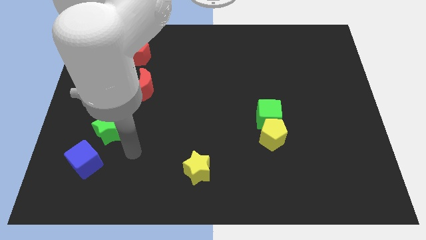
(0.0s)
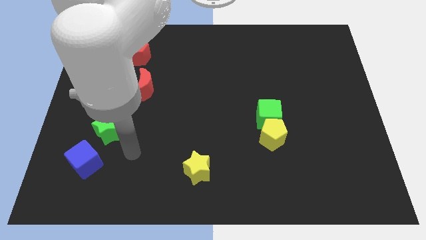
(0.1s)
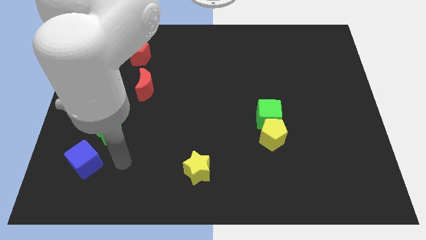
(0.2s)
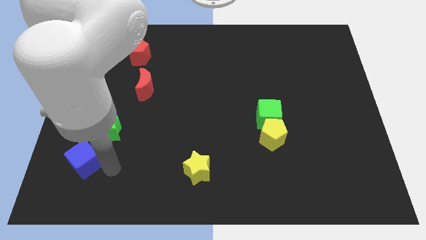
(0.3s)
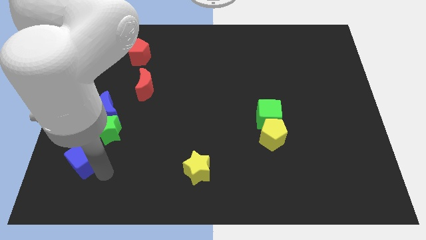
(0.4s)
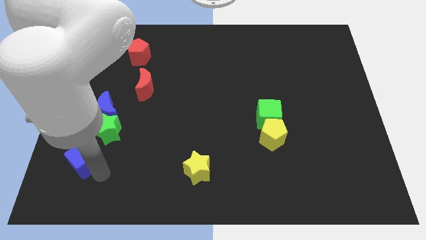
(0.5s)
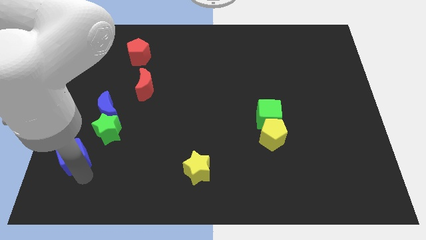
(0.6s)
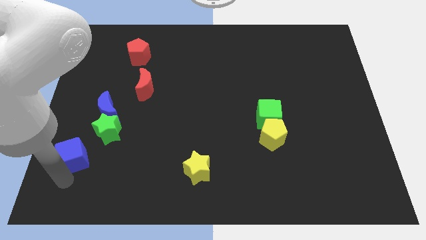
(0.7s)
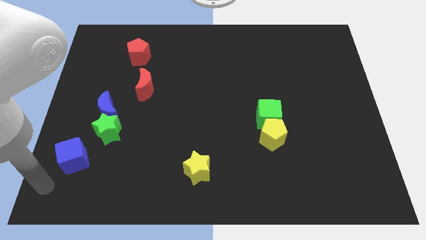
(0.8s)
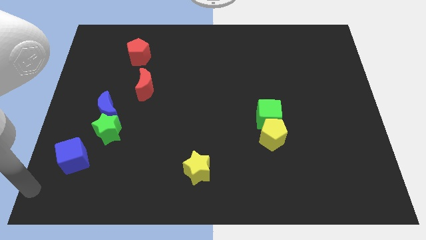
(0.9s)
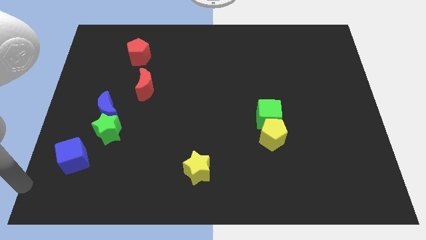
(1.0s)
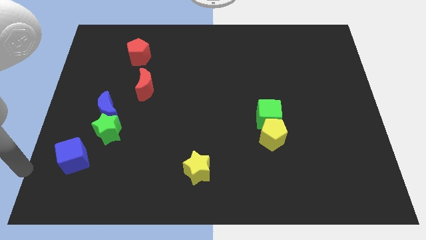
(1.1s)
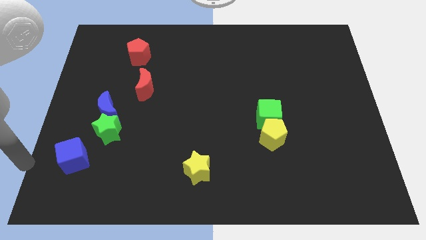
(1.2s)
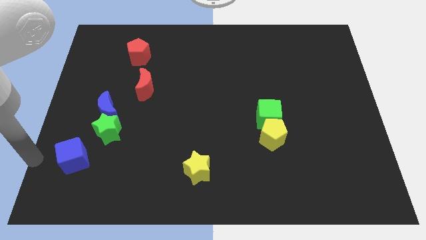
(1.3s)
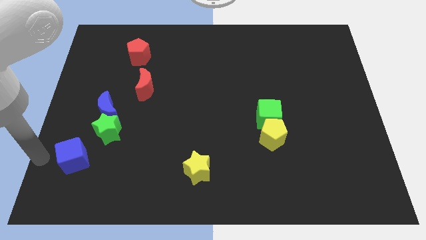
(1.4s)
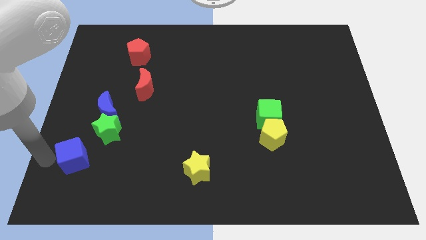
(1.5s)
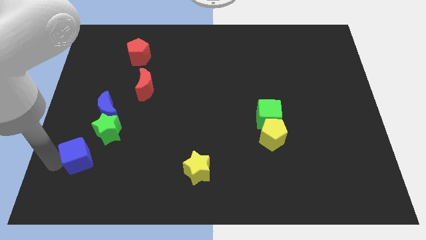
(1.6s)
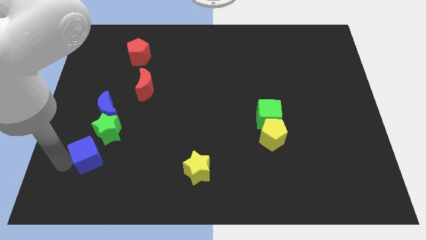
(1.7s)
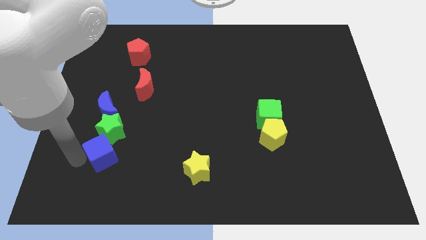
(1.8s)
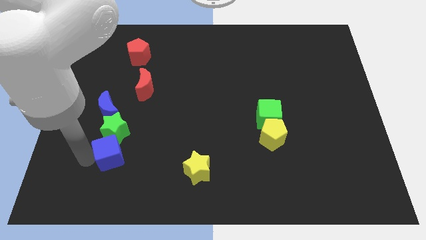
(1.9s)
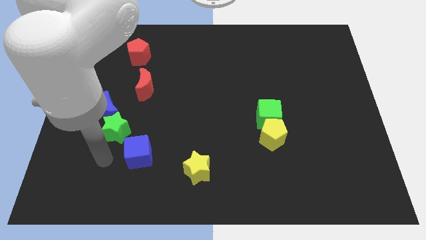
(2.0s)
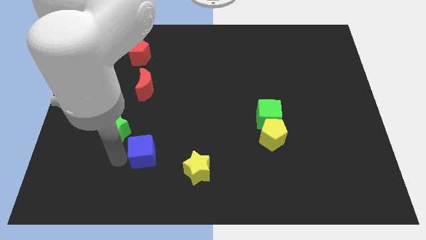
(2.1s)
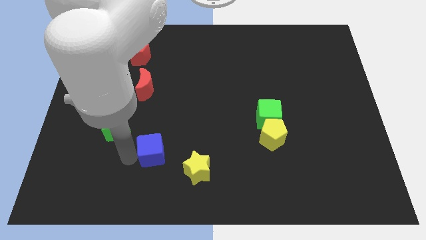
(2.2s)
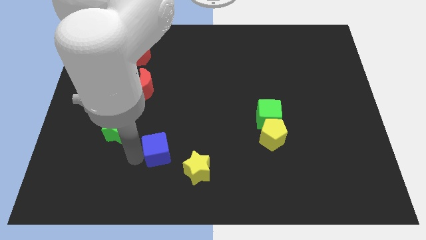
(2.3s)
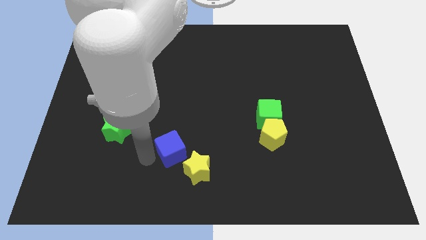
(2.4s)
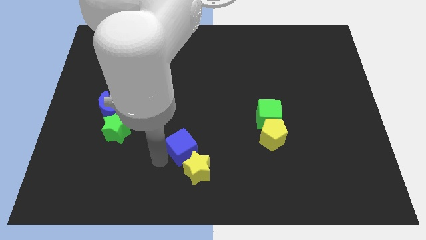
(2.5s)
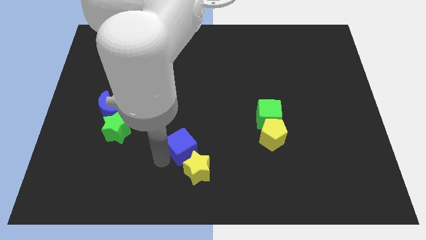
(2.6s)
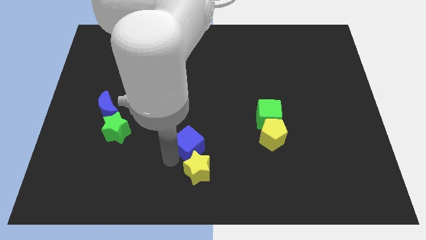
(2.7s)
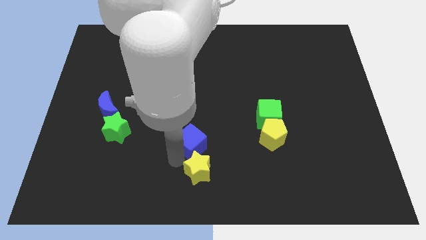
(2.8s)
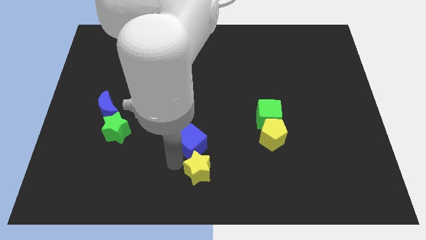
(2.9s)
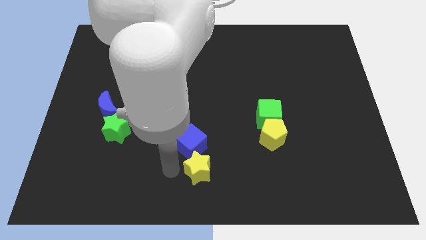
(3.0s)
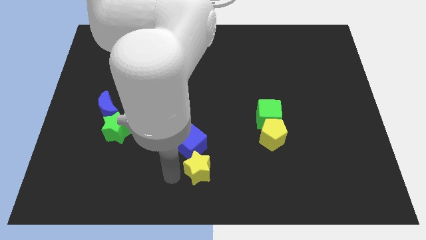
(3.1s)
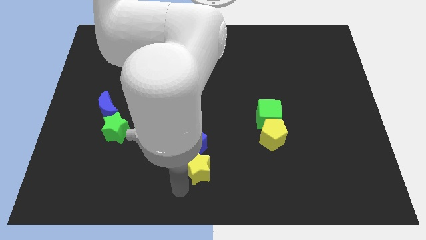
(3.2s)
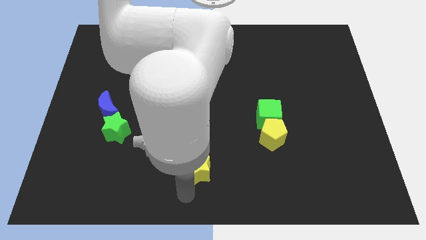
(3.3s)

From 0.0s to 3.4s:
place the blue cube above the yellow star

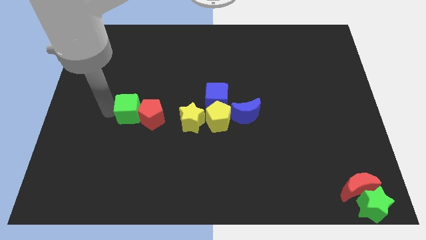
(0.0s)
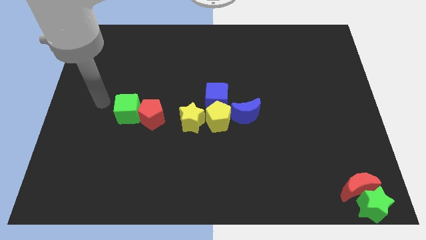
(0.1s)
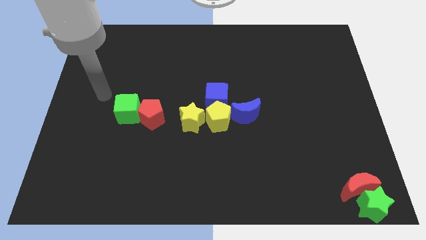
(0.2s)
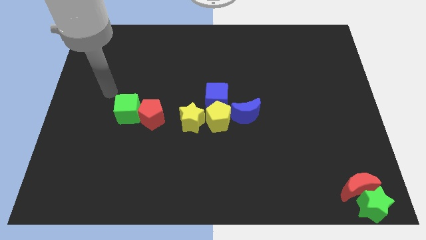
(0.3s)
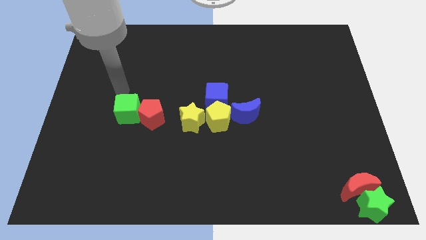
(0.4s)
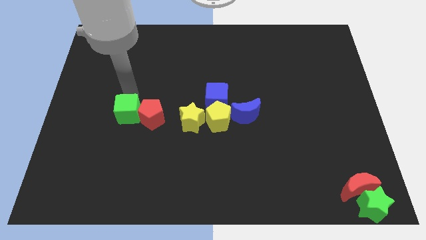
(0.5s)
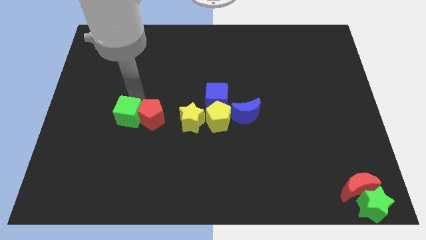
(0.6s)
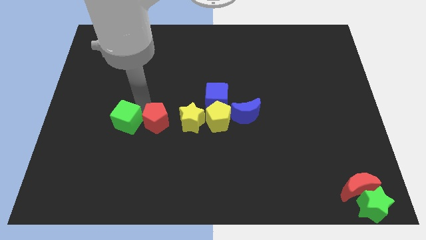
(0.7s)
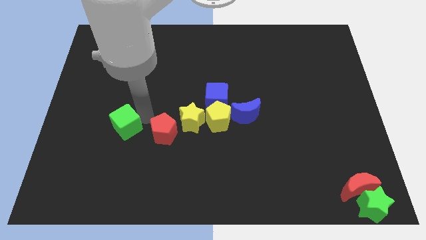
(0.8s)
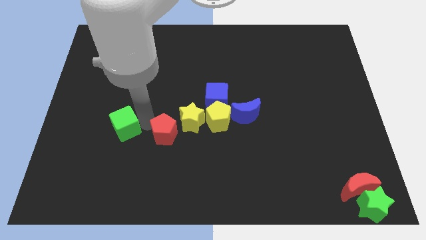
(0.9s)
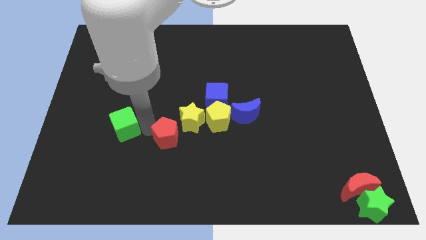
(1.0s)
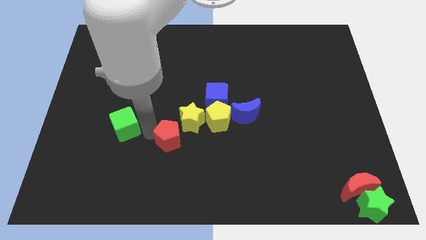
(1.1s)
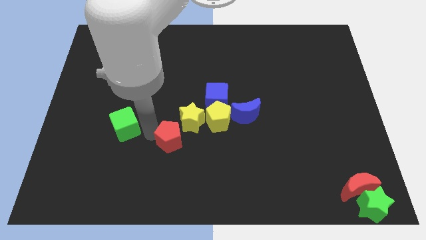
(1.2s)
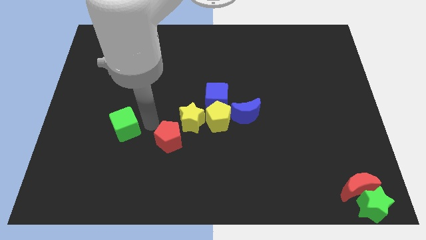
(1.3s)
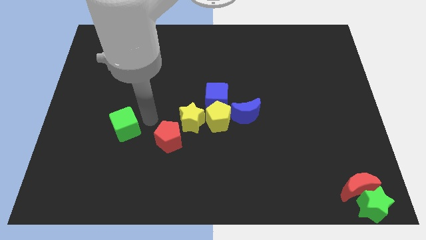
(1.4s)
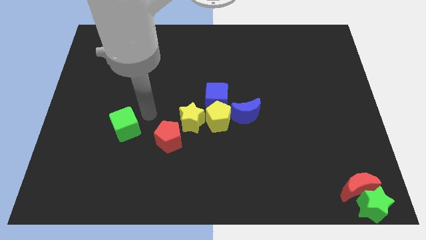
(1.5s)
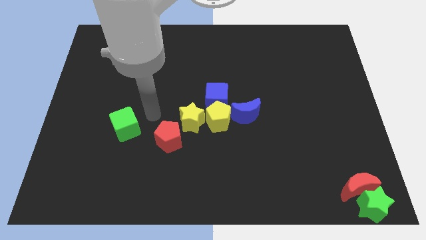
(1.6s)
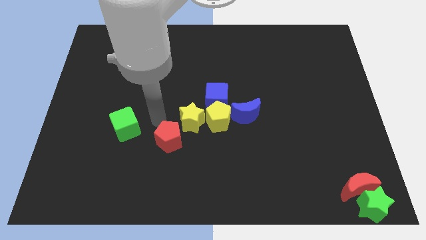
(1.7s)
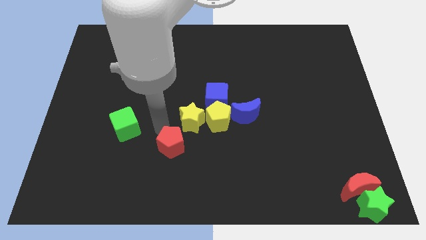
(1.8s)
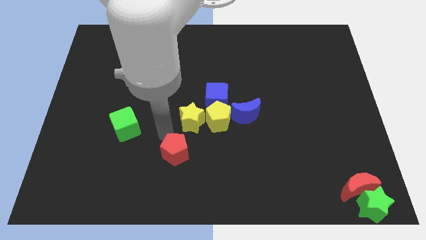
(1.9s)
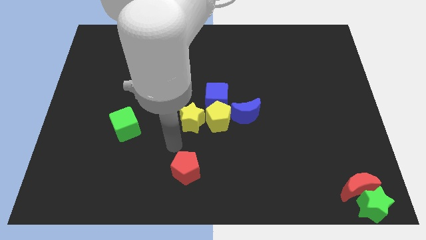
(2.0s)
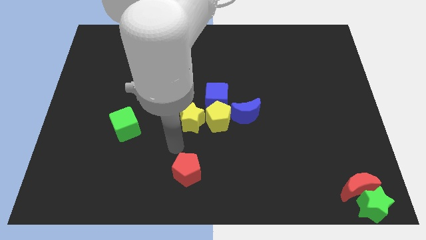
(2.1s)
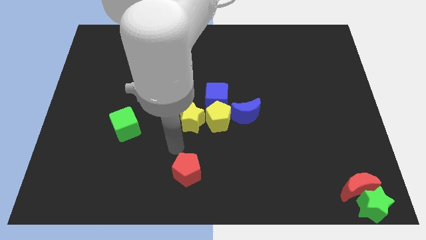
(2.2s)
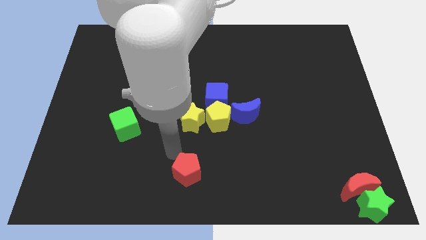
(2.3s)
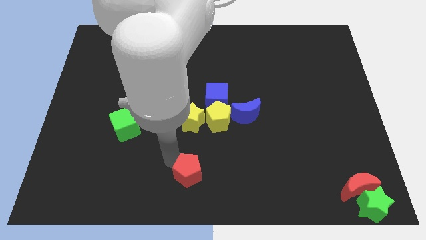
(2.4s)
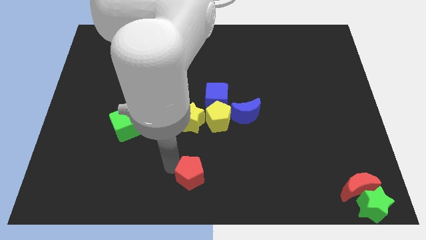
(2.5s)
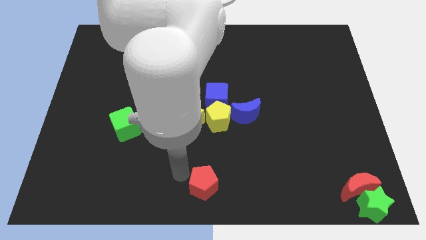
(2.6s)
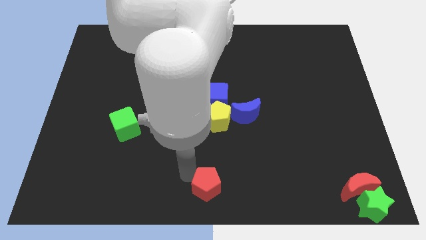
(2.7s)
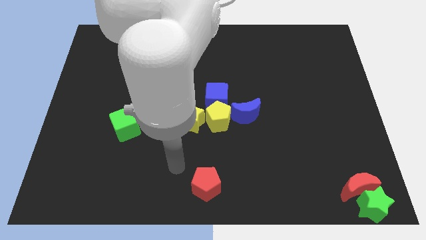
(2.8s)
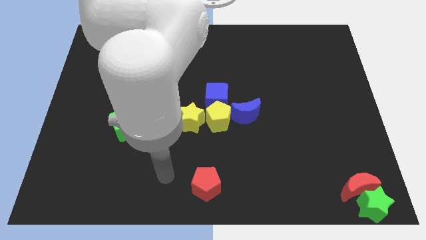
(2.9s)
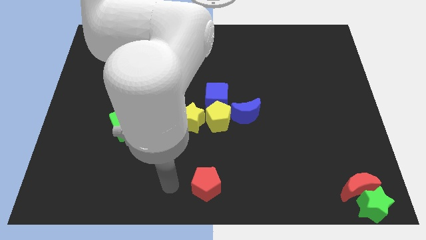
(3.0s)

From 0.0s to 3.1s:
push the red pentagon to the bottom center

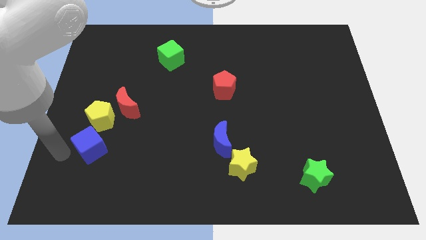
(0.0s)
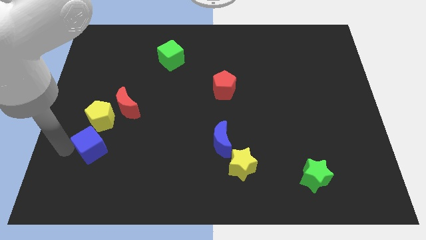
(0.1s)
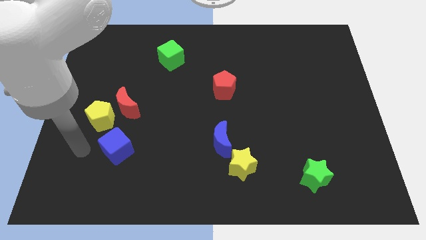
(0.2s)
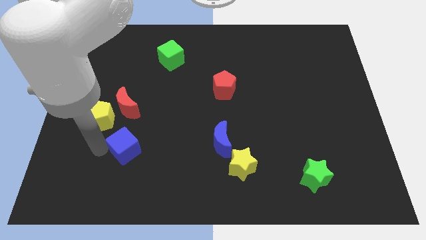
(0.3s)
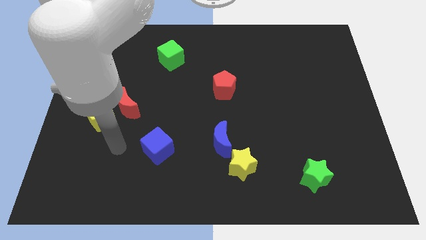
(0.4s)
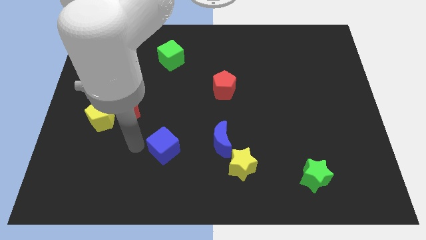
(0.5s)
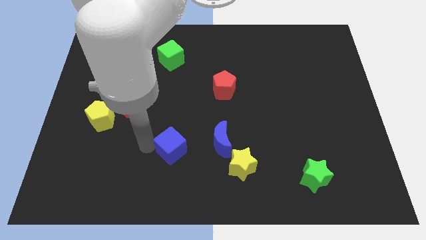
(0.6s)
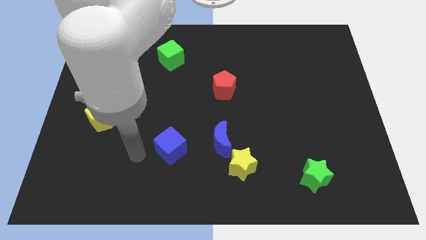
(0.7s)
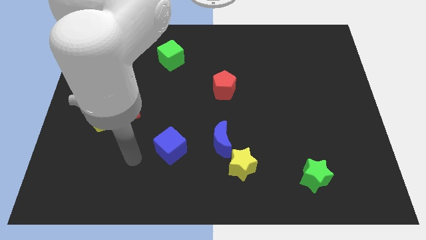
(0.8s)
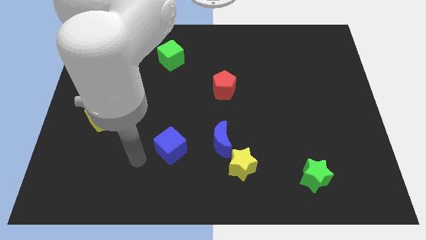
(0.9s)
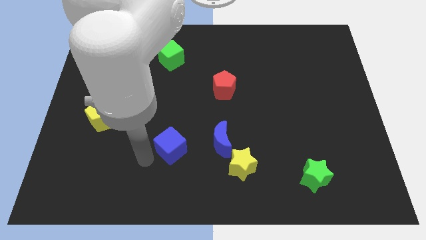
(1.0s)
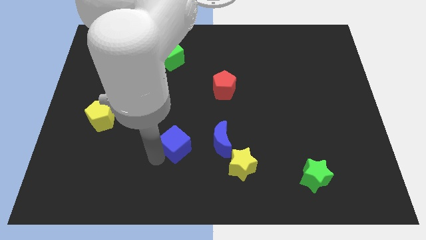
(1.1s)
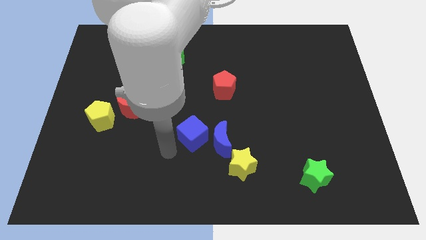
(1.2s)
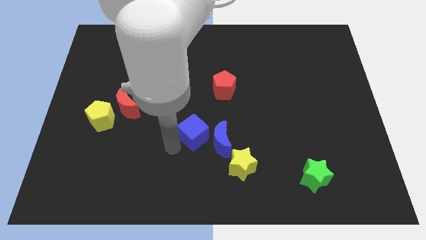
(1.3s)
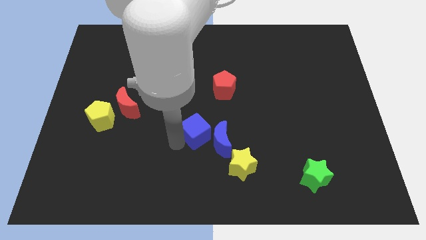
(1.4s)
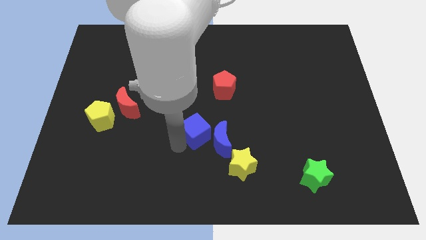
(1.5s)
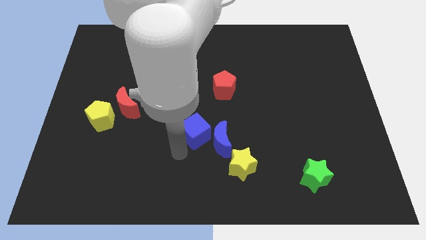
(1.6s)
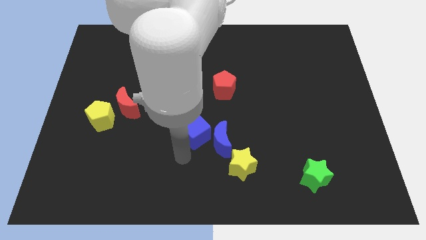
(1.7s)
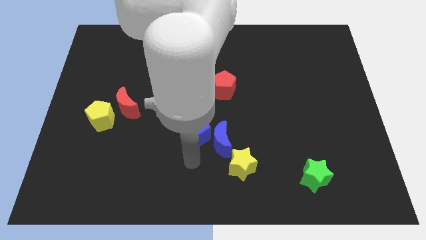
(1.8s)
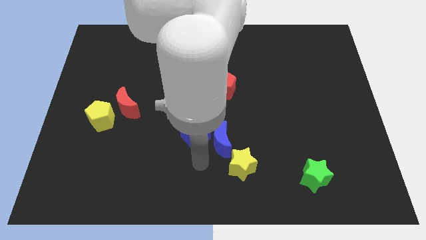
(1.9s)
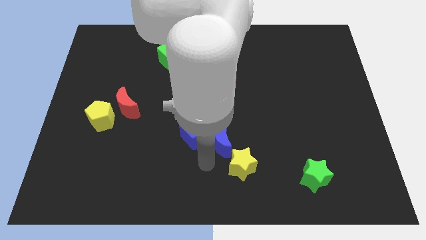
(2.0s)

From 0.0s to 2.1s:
push the blue cube towards the left of the blue crescent

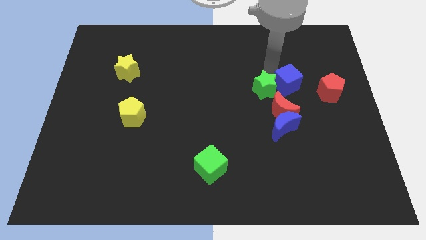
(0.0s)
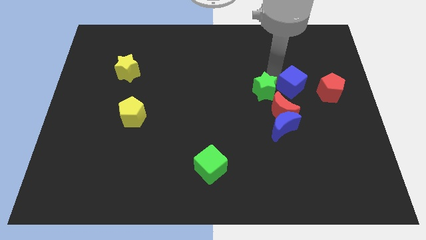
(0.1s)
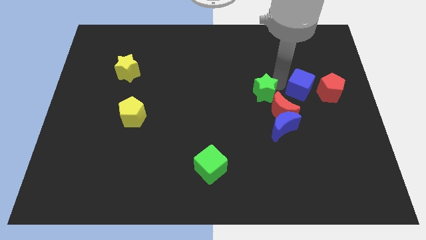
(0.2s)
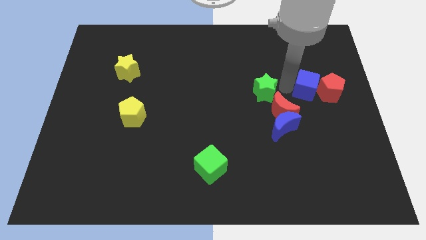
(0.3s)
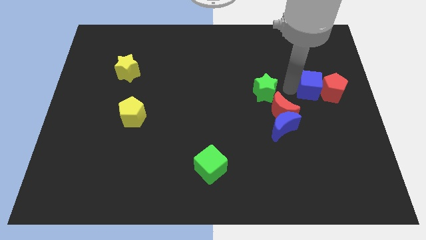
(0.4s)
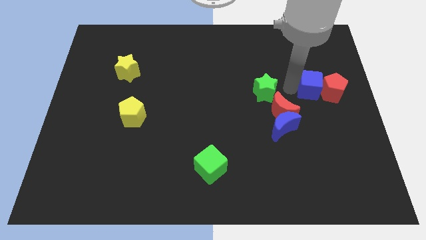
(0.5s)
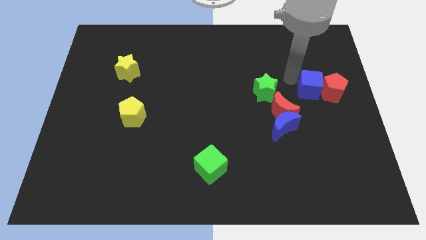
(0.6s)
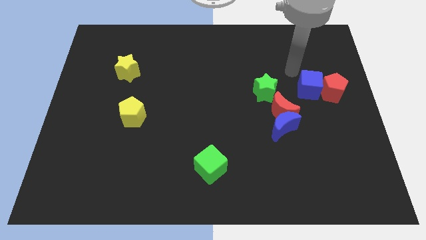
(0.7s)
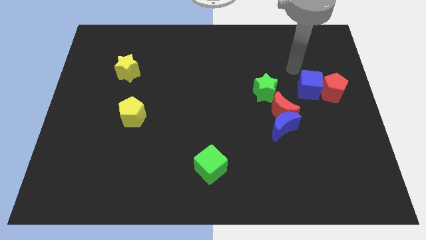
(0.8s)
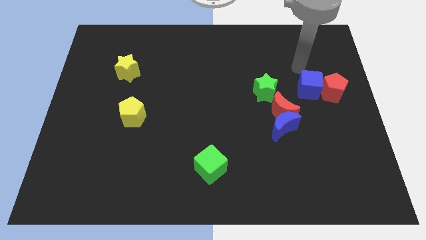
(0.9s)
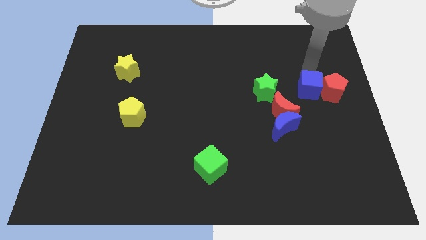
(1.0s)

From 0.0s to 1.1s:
push the blue cube into the red pentagon
